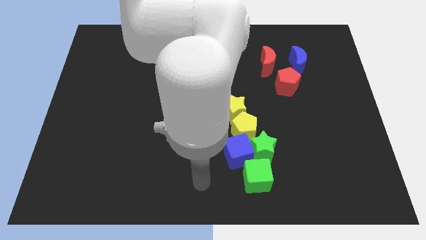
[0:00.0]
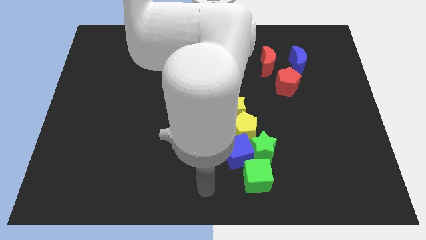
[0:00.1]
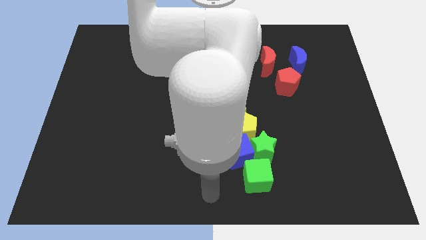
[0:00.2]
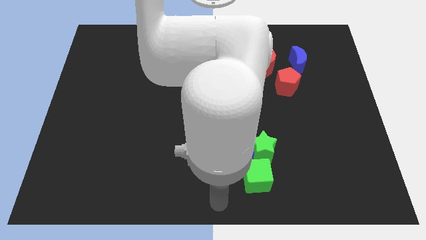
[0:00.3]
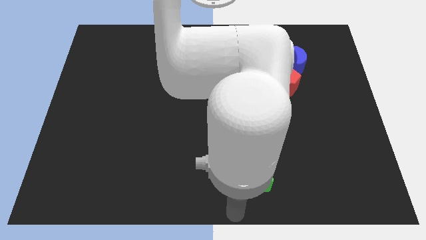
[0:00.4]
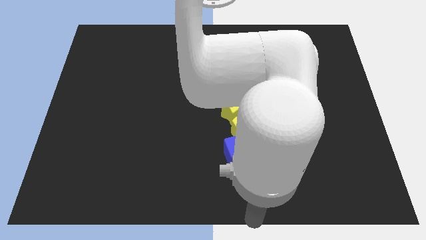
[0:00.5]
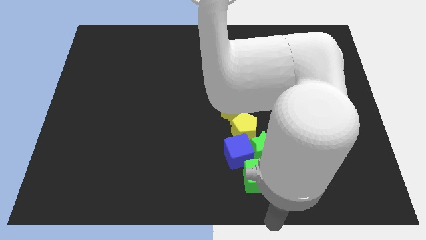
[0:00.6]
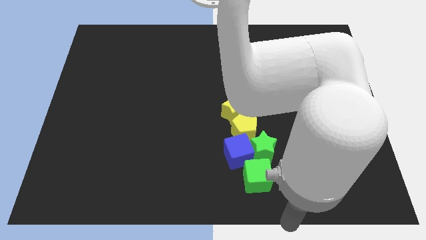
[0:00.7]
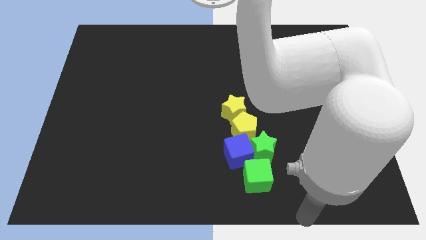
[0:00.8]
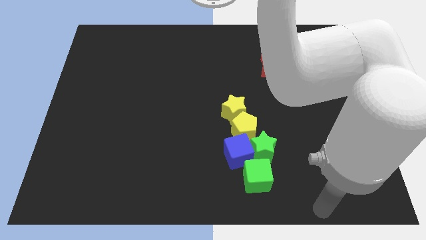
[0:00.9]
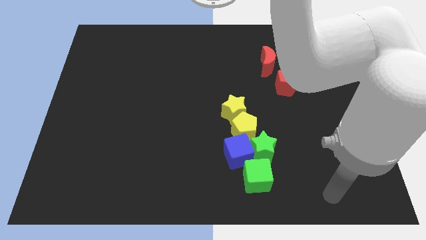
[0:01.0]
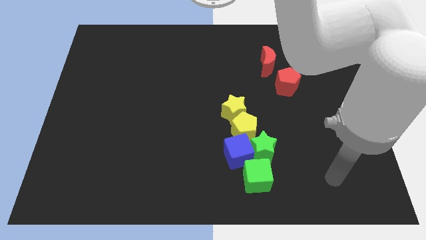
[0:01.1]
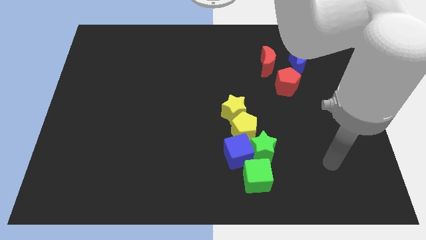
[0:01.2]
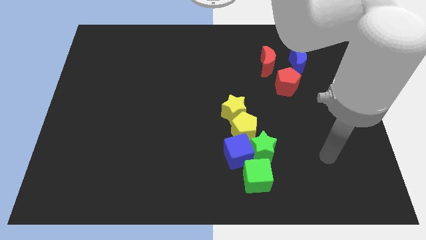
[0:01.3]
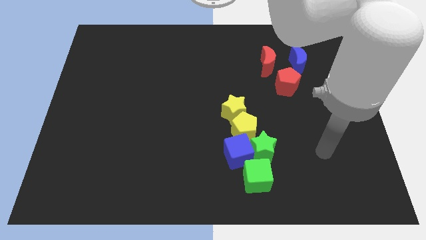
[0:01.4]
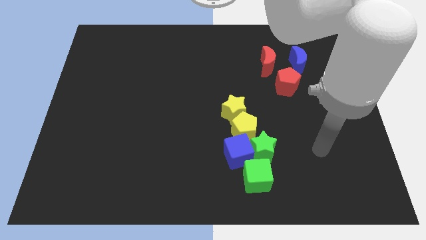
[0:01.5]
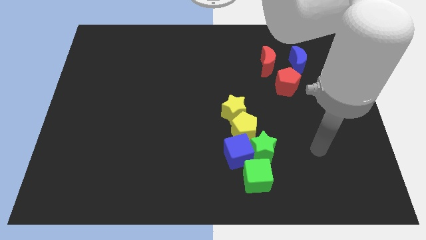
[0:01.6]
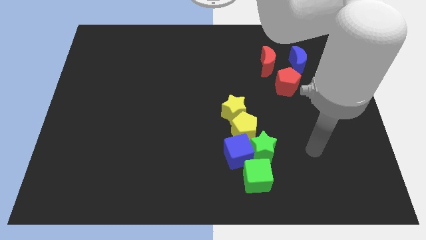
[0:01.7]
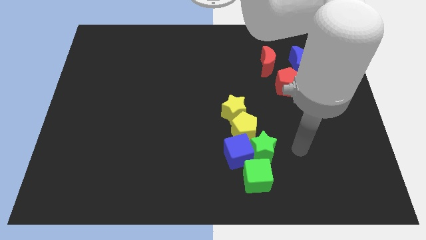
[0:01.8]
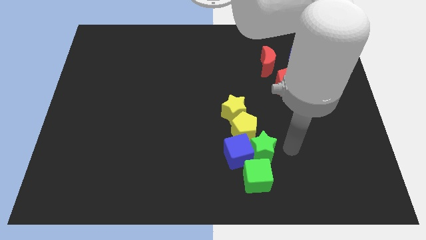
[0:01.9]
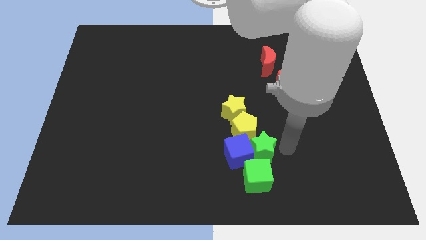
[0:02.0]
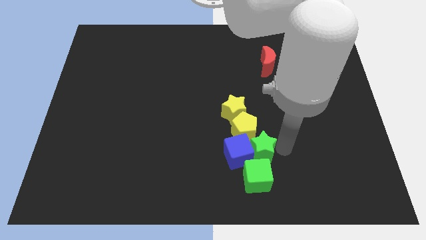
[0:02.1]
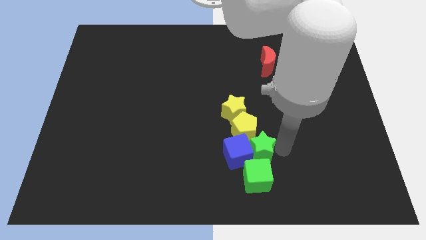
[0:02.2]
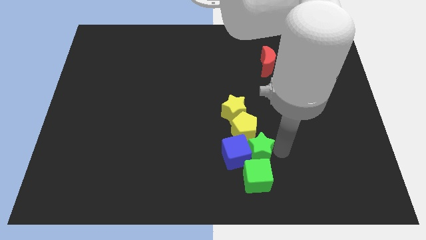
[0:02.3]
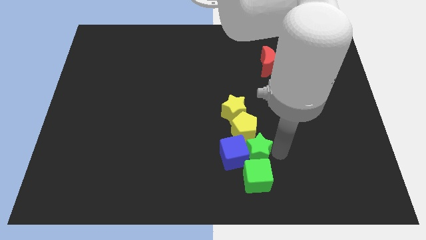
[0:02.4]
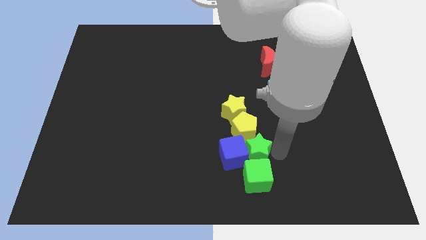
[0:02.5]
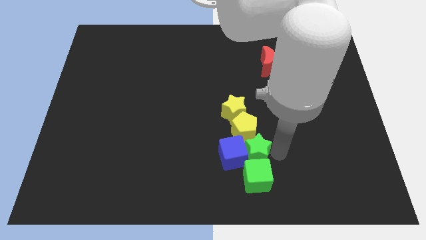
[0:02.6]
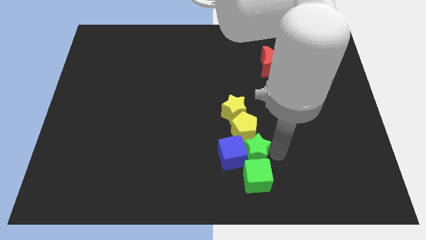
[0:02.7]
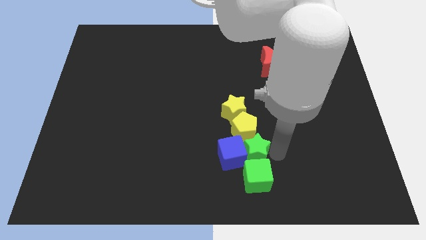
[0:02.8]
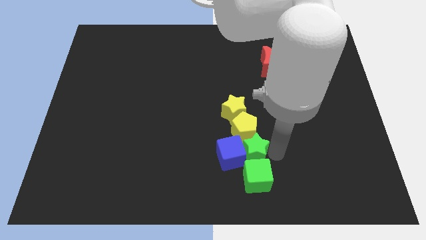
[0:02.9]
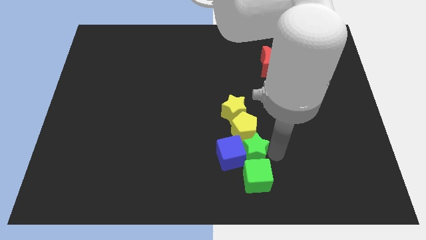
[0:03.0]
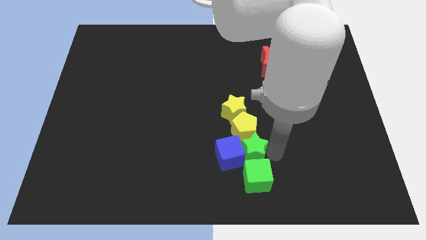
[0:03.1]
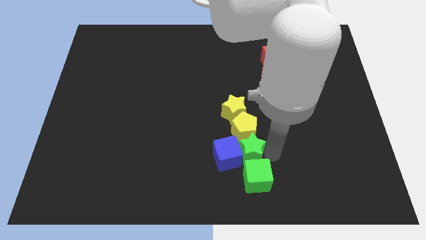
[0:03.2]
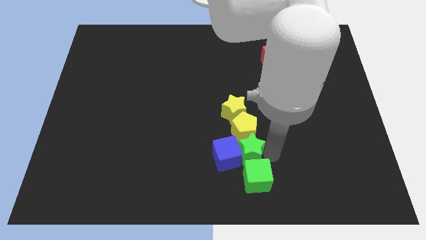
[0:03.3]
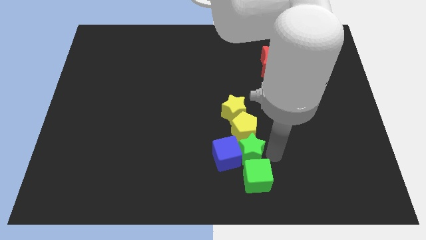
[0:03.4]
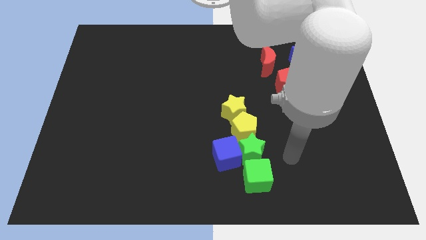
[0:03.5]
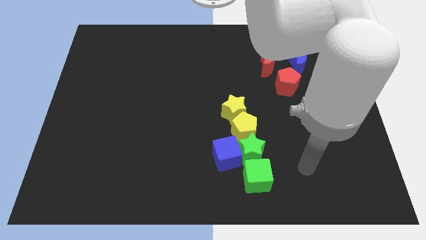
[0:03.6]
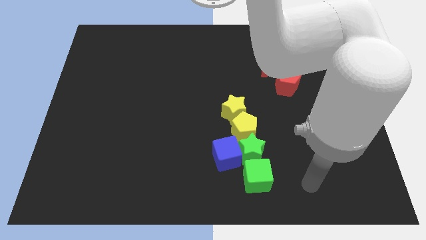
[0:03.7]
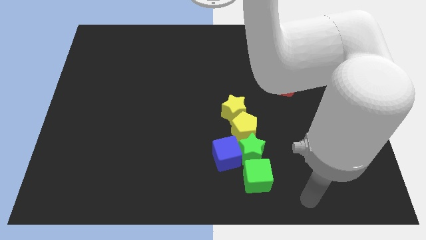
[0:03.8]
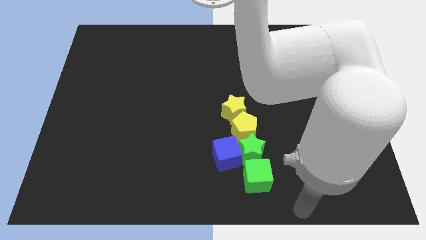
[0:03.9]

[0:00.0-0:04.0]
adjust the green star to form a line

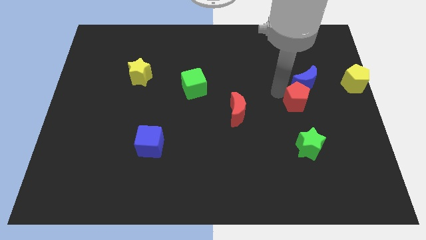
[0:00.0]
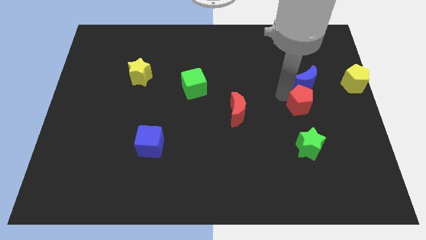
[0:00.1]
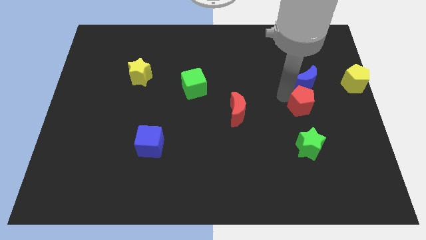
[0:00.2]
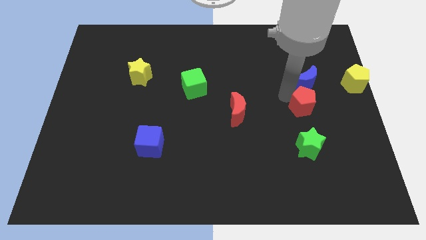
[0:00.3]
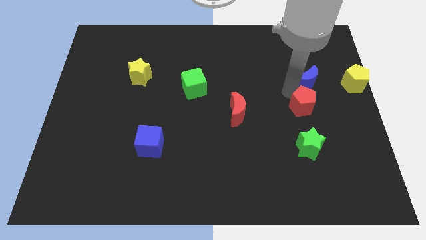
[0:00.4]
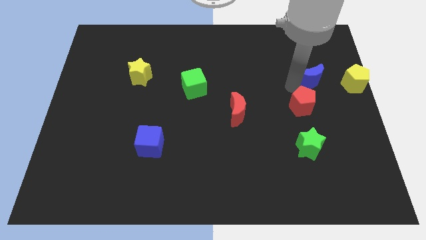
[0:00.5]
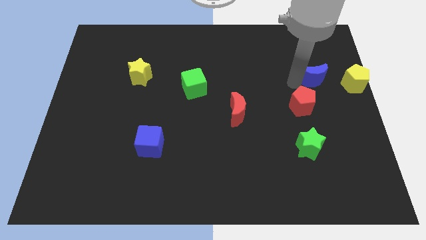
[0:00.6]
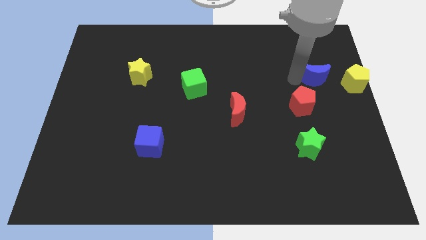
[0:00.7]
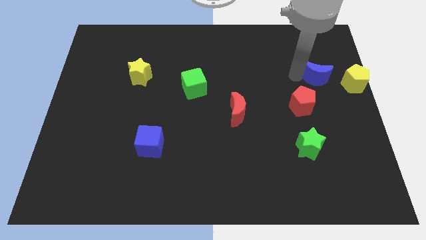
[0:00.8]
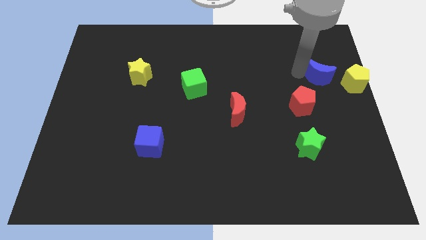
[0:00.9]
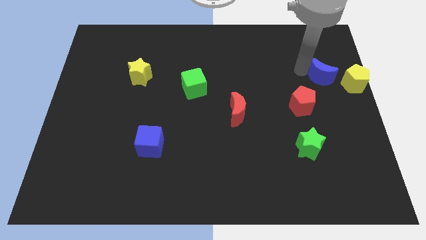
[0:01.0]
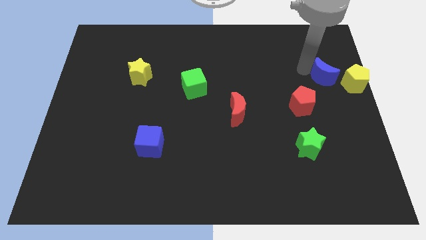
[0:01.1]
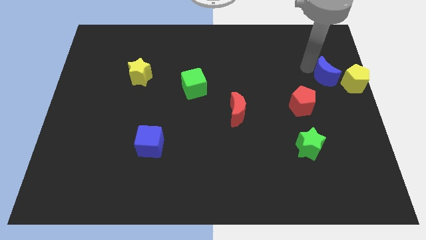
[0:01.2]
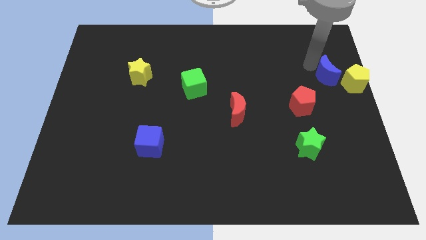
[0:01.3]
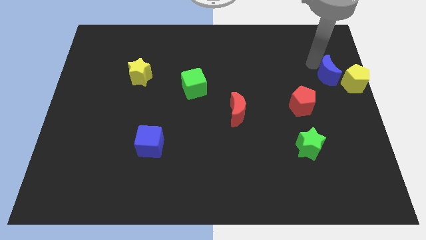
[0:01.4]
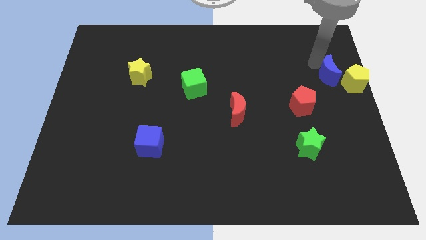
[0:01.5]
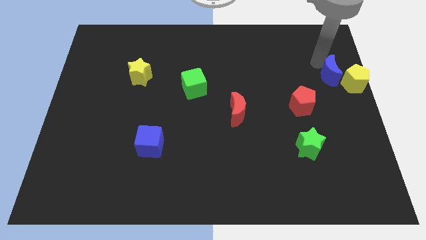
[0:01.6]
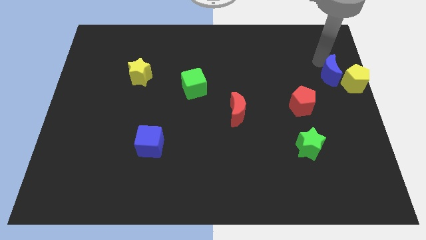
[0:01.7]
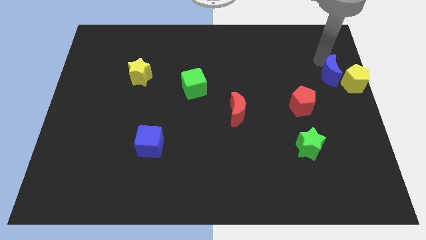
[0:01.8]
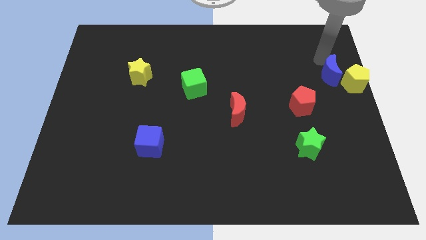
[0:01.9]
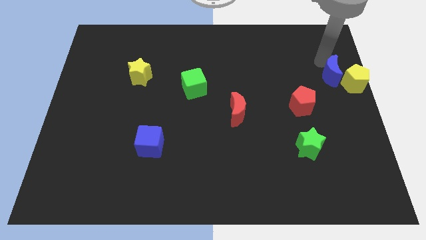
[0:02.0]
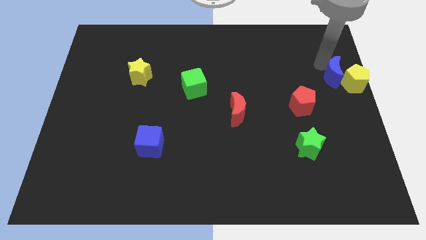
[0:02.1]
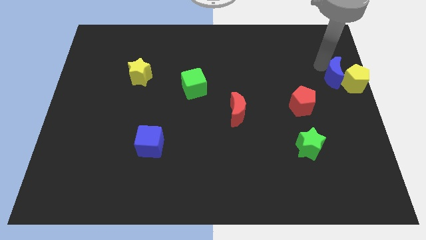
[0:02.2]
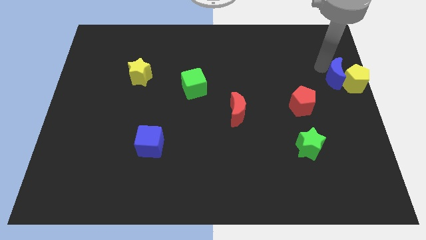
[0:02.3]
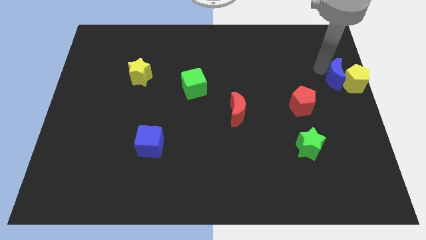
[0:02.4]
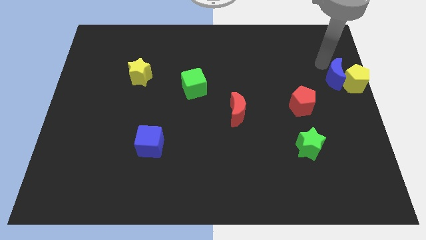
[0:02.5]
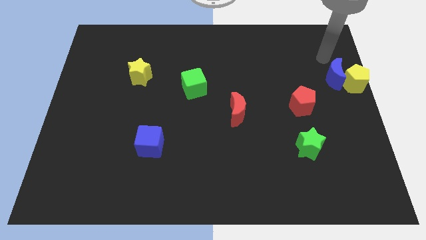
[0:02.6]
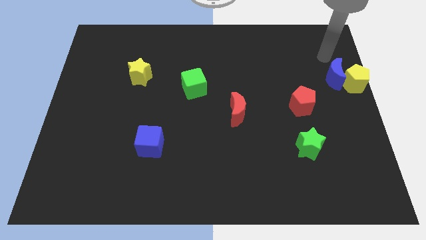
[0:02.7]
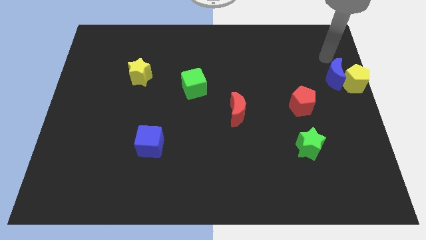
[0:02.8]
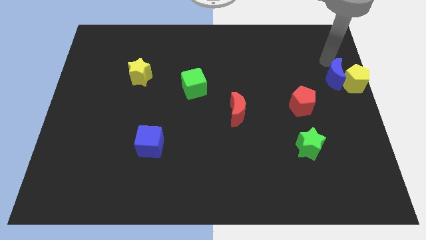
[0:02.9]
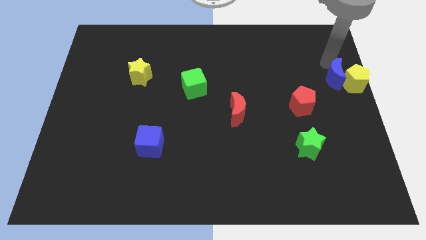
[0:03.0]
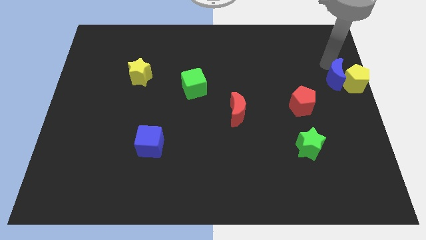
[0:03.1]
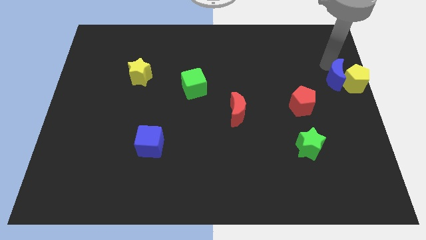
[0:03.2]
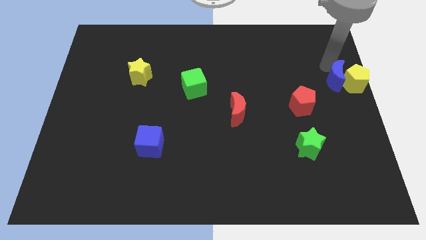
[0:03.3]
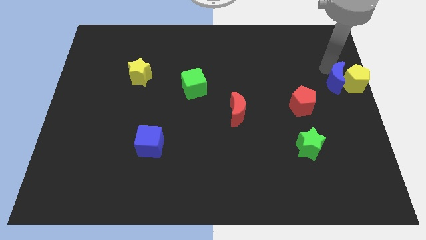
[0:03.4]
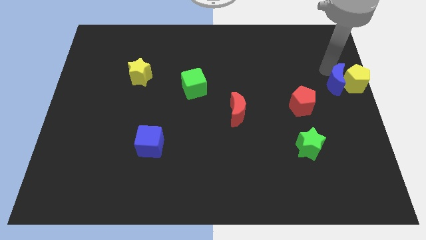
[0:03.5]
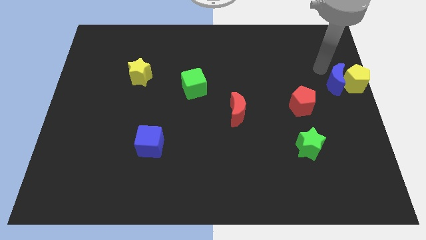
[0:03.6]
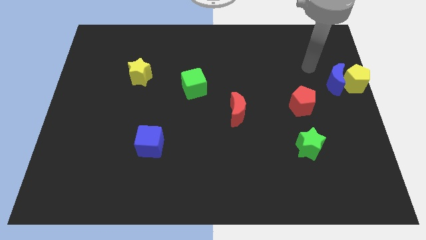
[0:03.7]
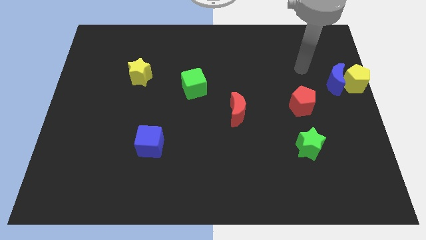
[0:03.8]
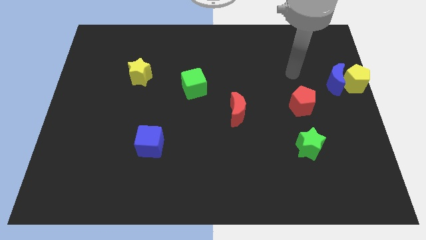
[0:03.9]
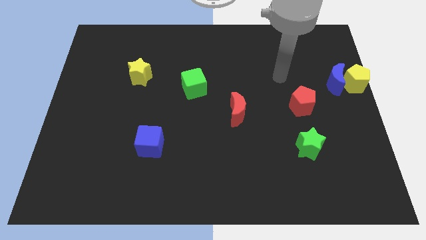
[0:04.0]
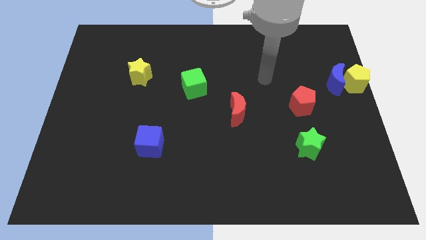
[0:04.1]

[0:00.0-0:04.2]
push the blue moon towards the yellow pentgaon

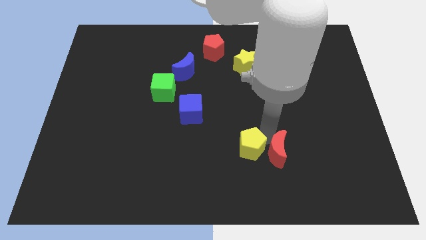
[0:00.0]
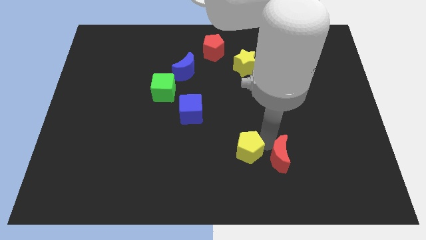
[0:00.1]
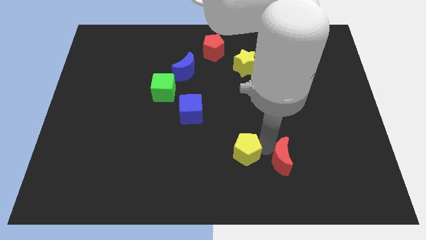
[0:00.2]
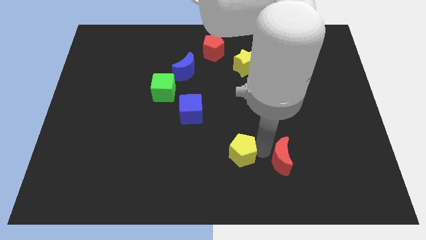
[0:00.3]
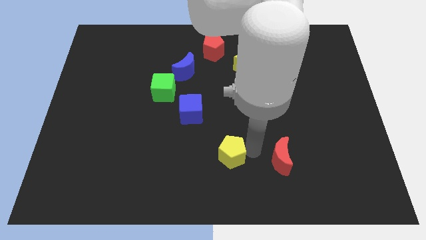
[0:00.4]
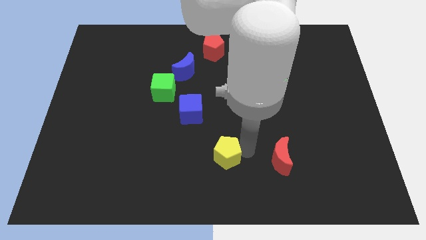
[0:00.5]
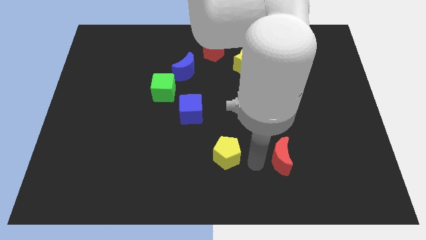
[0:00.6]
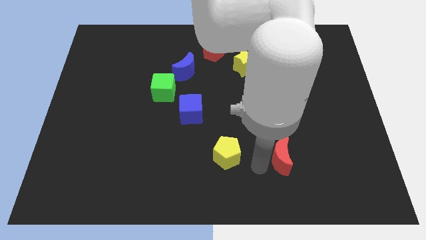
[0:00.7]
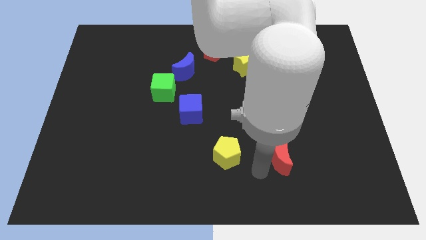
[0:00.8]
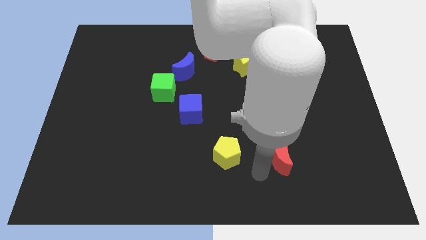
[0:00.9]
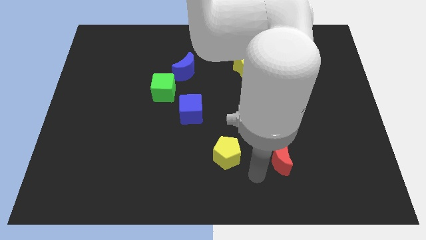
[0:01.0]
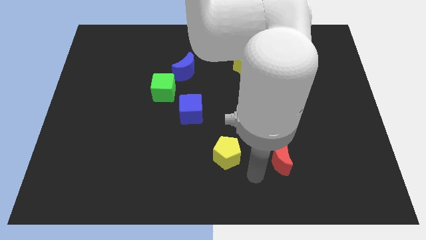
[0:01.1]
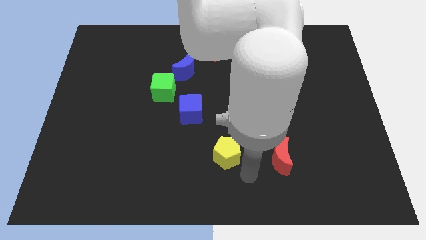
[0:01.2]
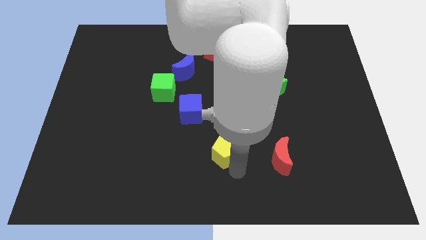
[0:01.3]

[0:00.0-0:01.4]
push the yellow pentagon away from the red crescent
